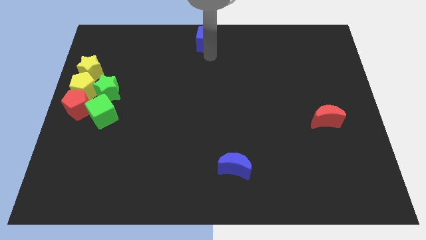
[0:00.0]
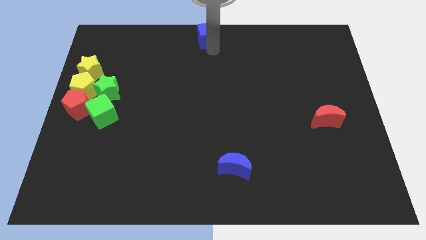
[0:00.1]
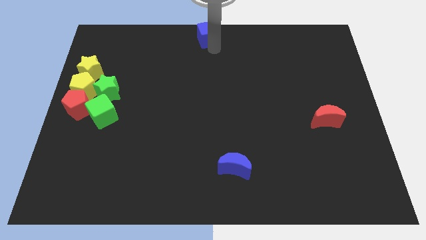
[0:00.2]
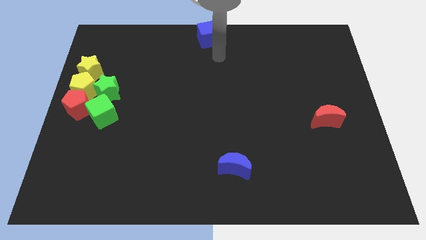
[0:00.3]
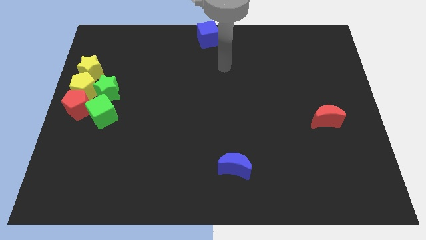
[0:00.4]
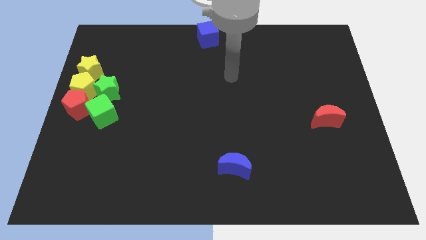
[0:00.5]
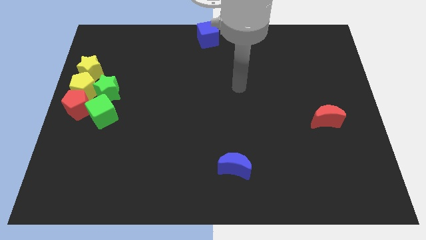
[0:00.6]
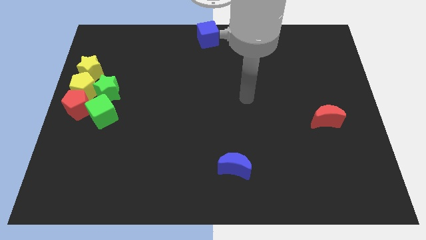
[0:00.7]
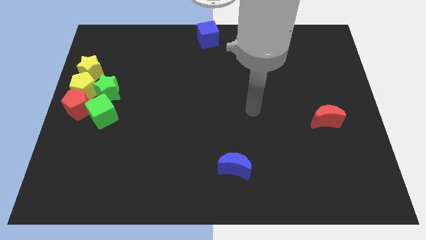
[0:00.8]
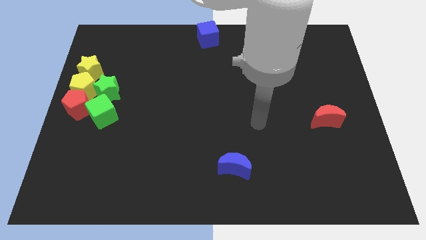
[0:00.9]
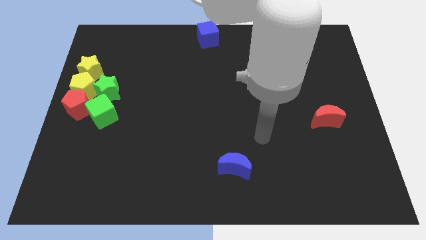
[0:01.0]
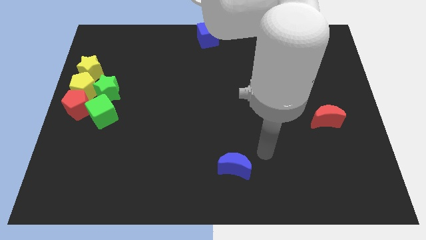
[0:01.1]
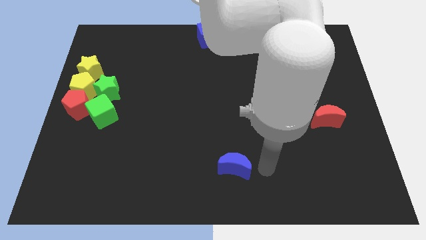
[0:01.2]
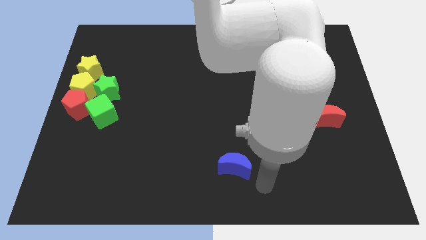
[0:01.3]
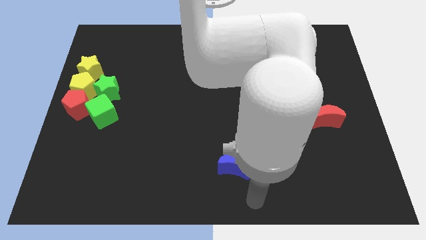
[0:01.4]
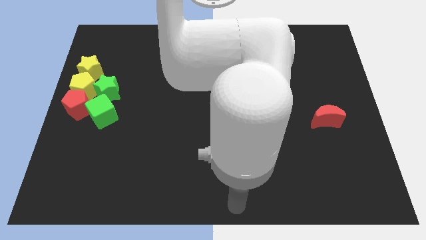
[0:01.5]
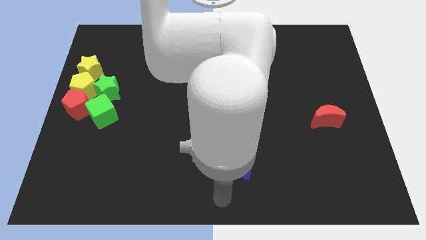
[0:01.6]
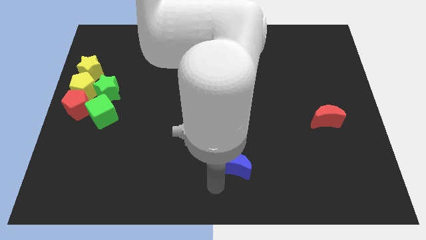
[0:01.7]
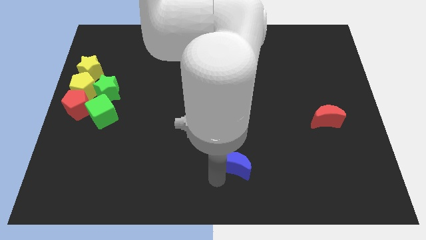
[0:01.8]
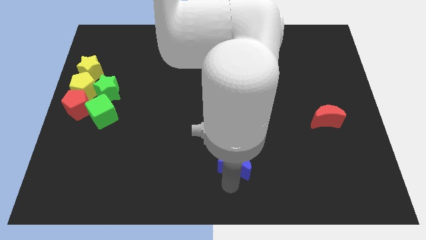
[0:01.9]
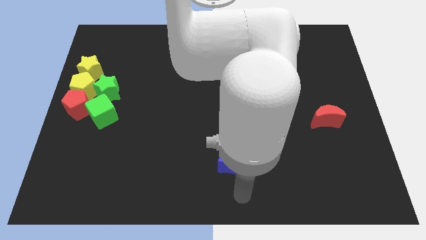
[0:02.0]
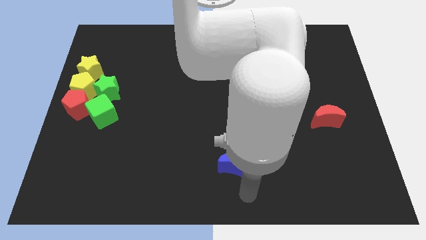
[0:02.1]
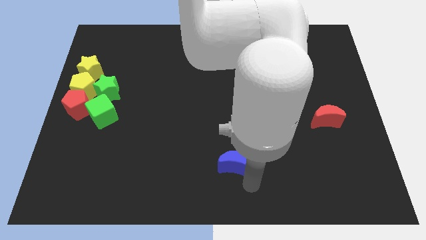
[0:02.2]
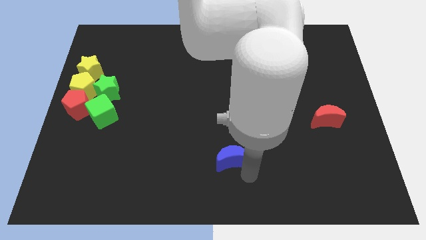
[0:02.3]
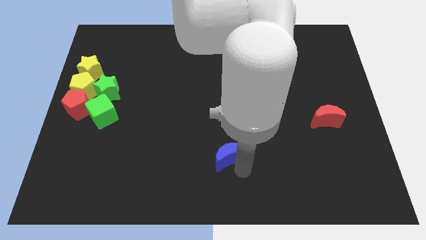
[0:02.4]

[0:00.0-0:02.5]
touch the bottom of blue moon

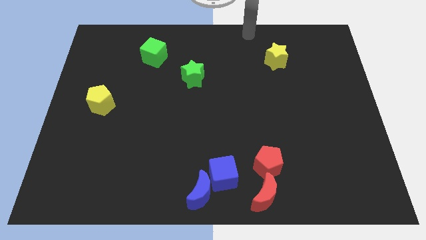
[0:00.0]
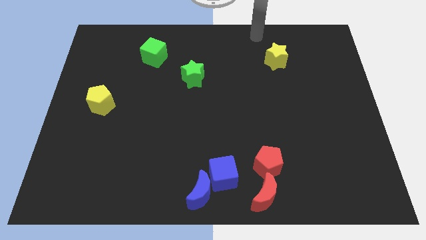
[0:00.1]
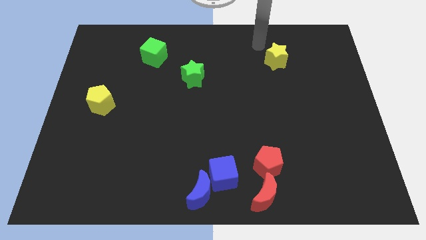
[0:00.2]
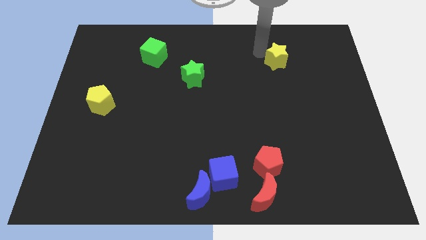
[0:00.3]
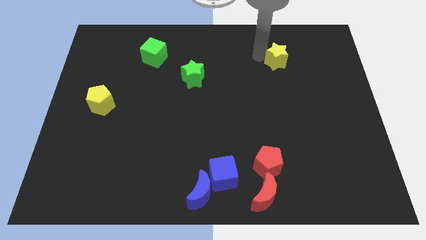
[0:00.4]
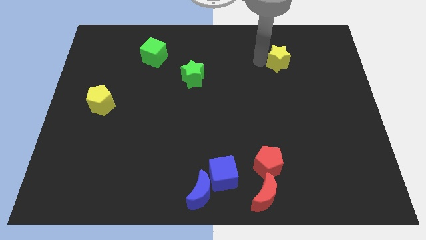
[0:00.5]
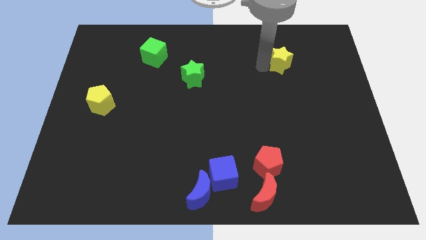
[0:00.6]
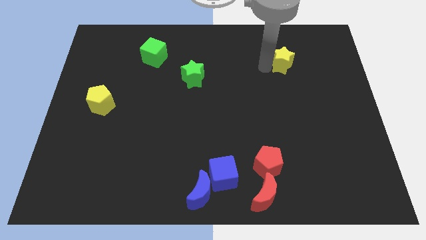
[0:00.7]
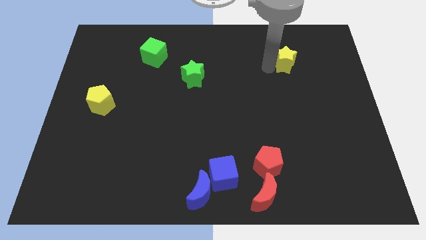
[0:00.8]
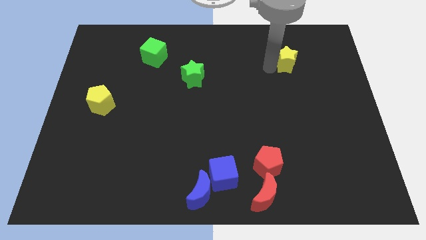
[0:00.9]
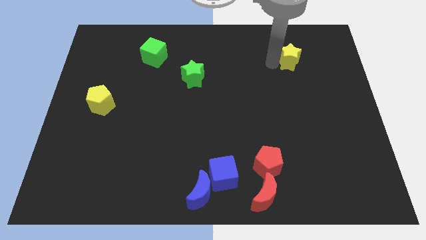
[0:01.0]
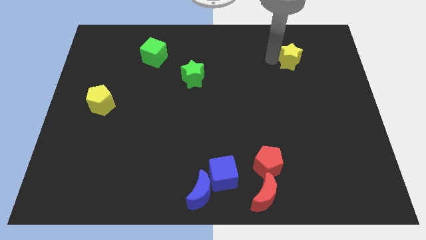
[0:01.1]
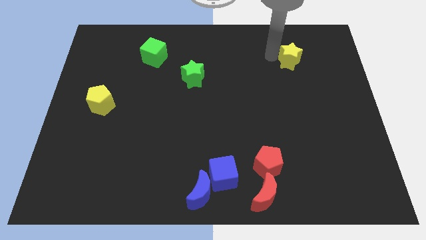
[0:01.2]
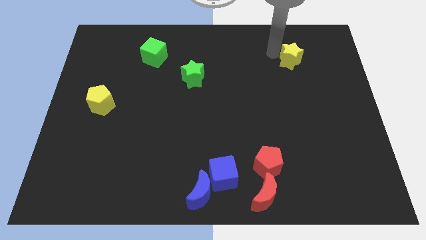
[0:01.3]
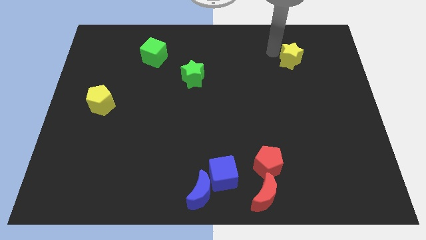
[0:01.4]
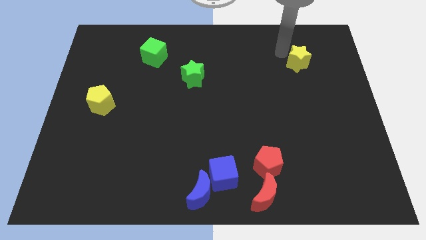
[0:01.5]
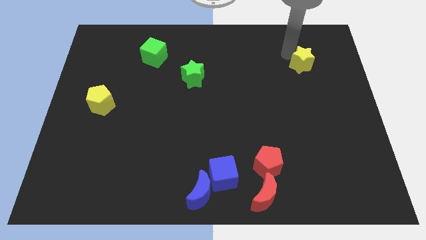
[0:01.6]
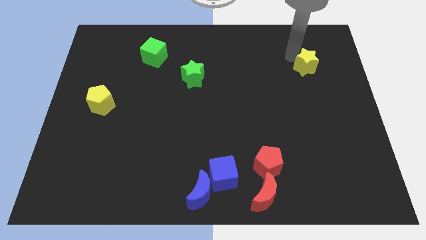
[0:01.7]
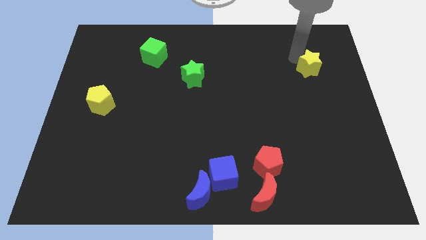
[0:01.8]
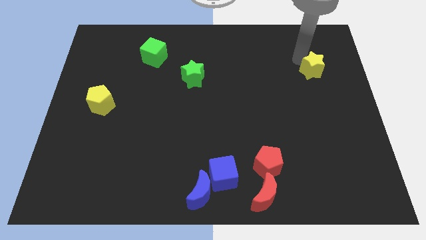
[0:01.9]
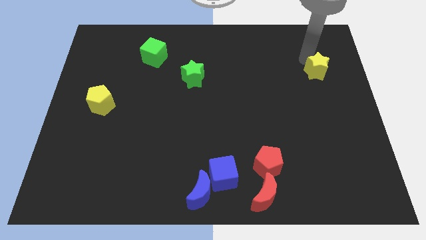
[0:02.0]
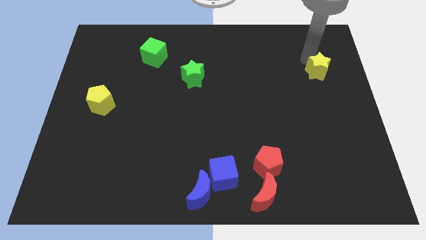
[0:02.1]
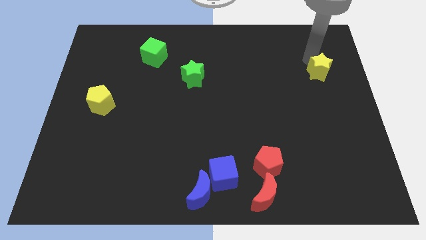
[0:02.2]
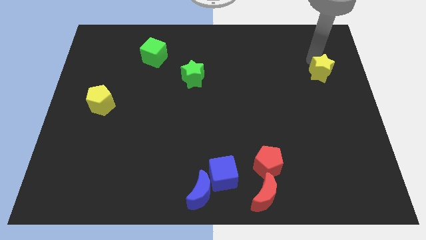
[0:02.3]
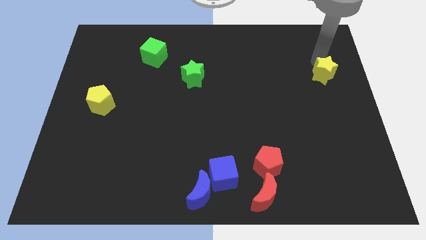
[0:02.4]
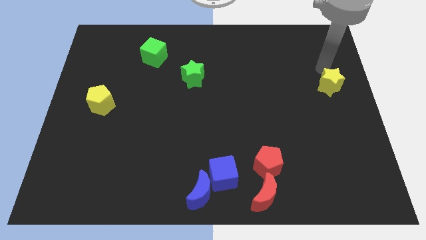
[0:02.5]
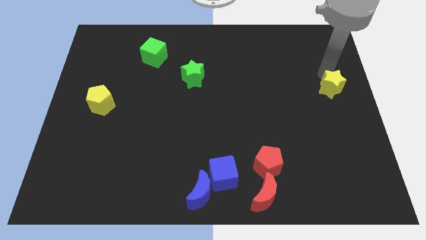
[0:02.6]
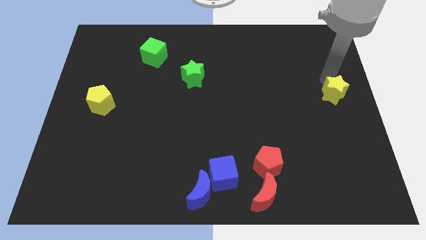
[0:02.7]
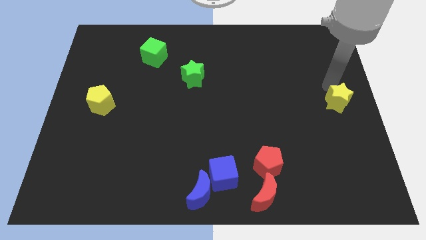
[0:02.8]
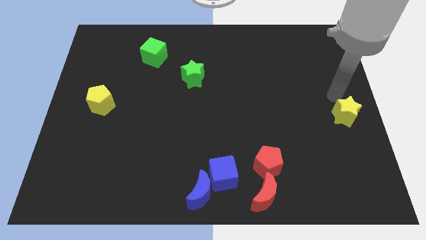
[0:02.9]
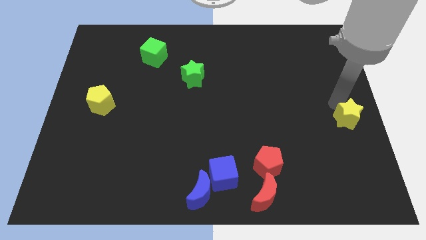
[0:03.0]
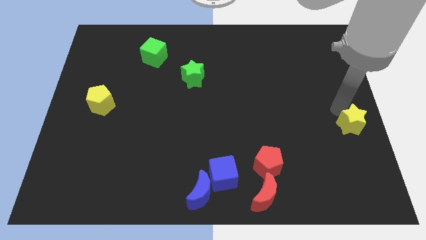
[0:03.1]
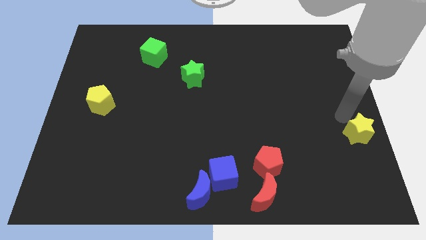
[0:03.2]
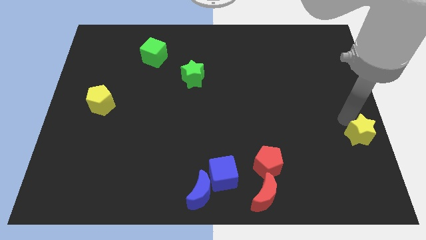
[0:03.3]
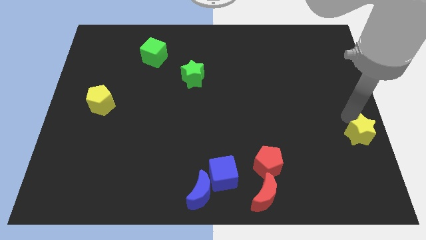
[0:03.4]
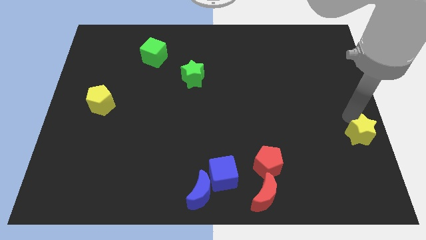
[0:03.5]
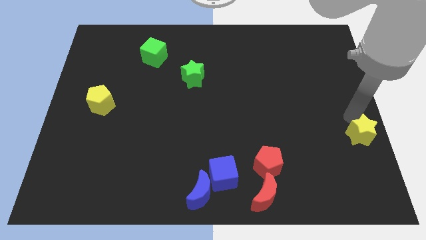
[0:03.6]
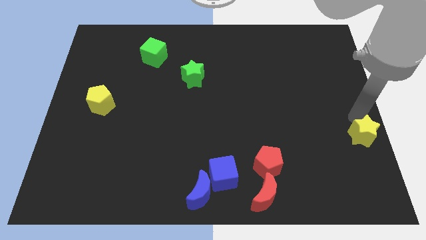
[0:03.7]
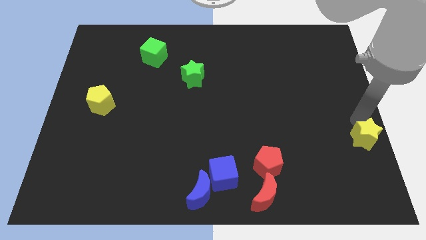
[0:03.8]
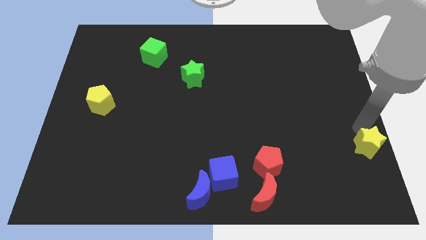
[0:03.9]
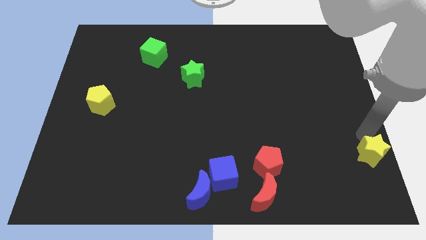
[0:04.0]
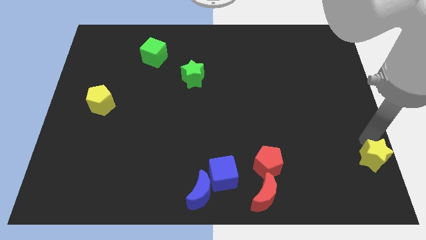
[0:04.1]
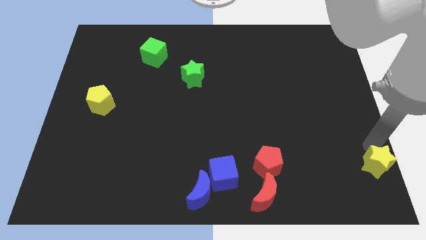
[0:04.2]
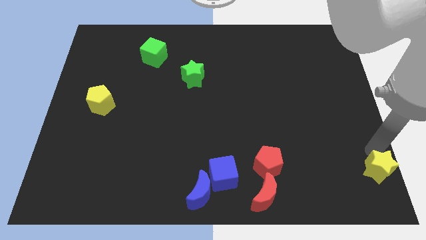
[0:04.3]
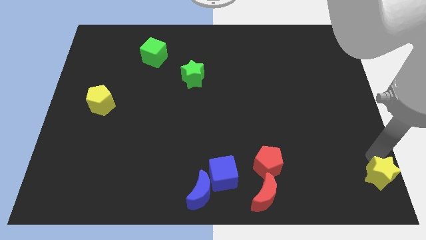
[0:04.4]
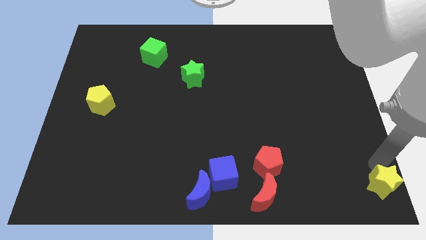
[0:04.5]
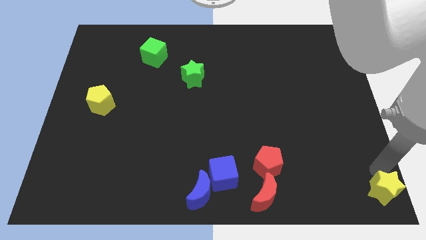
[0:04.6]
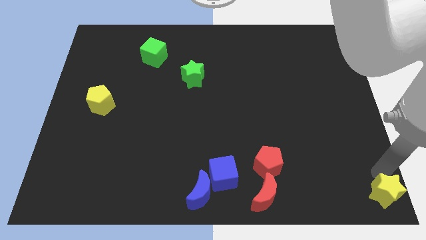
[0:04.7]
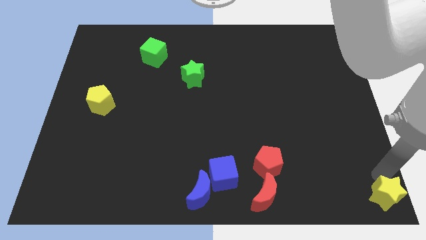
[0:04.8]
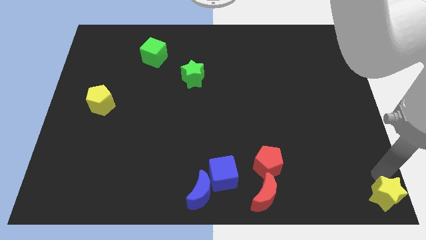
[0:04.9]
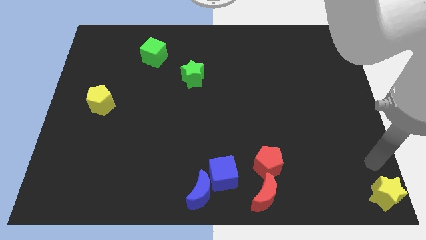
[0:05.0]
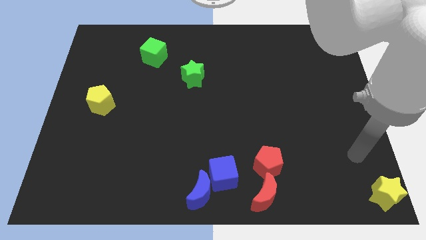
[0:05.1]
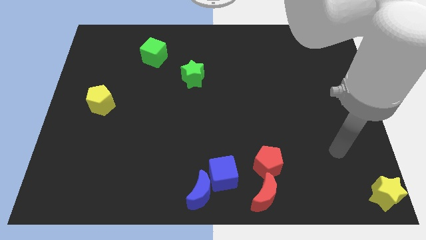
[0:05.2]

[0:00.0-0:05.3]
push the yellow star to the bottom right corner

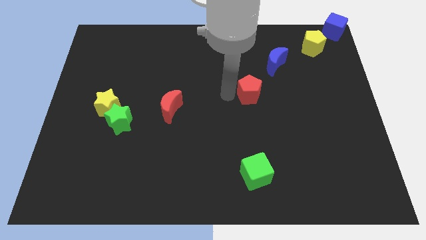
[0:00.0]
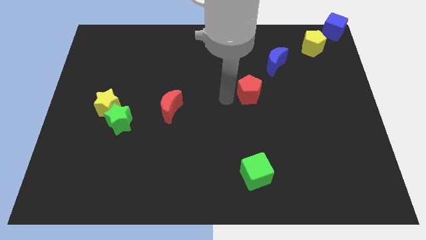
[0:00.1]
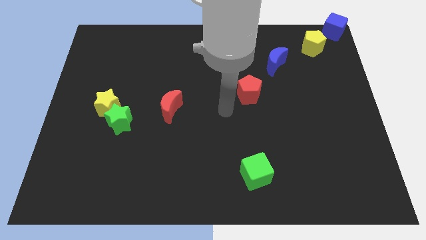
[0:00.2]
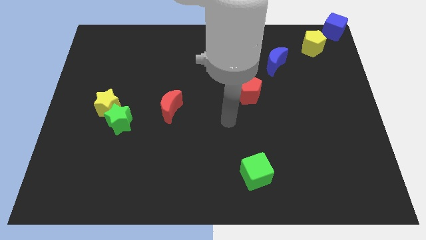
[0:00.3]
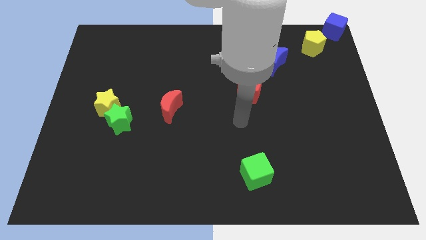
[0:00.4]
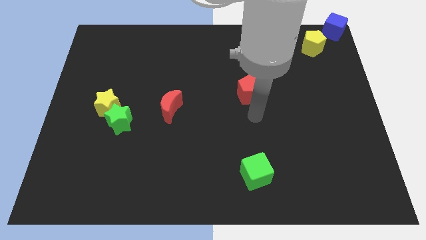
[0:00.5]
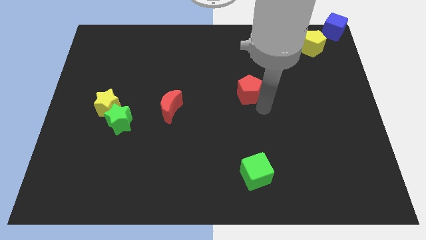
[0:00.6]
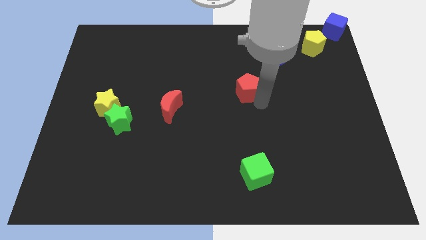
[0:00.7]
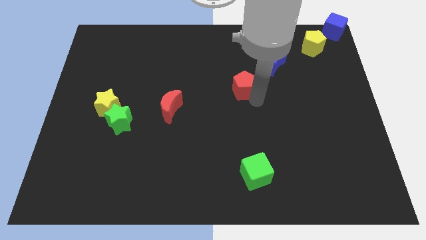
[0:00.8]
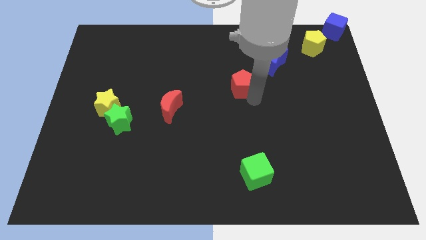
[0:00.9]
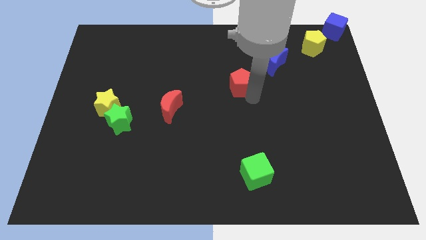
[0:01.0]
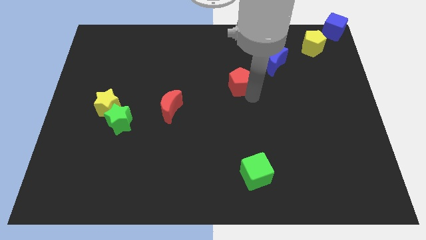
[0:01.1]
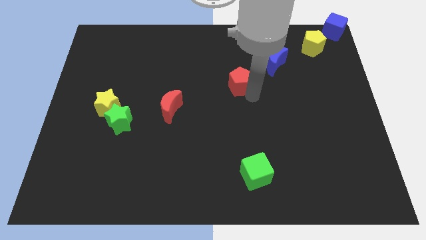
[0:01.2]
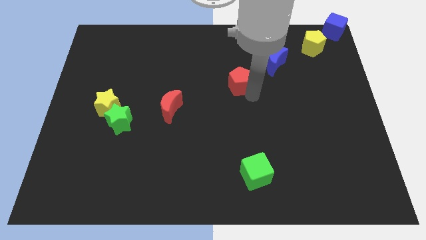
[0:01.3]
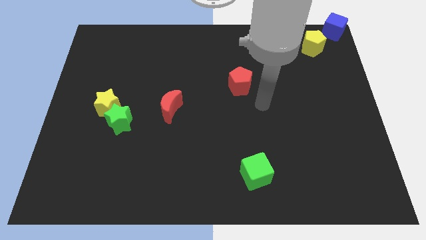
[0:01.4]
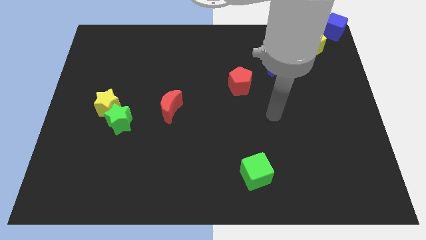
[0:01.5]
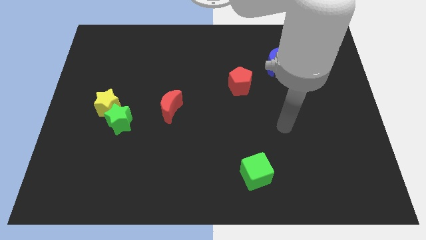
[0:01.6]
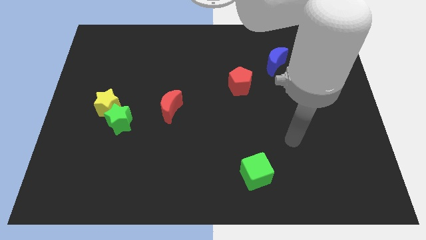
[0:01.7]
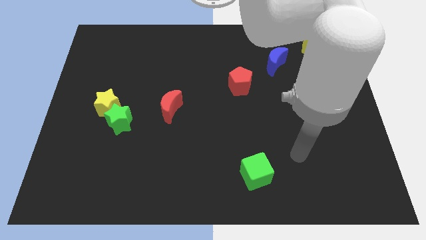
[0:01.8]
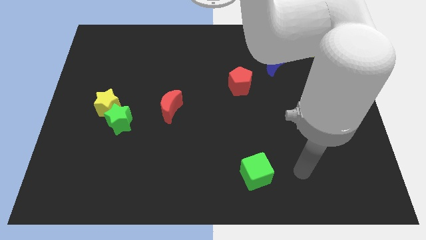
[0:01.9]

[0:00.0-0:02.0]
push red pentagon towards the blue crescent
